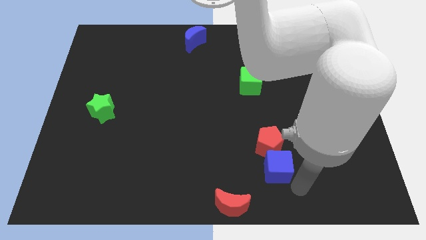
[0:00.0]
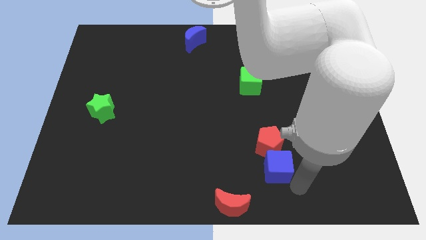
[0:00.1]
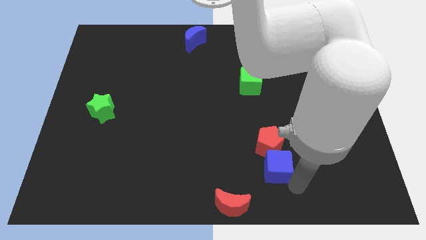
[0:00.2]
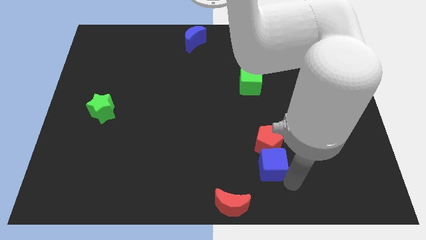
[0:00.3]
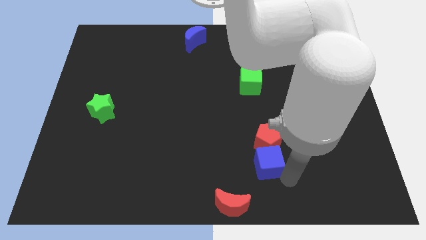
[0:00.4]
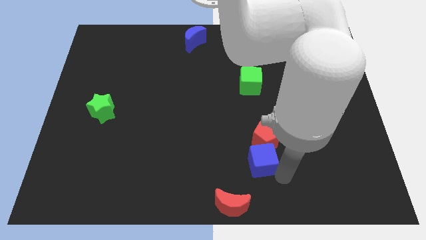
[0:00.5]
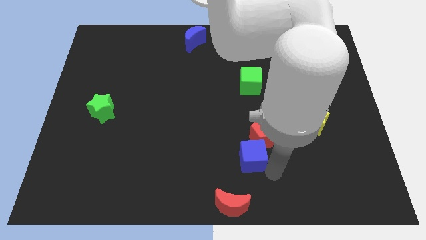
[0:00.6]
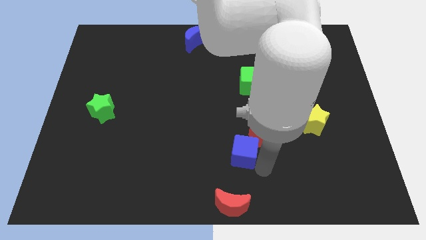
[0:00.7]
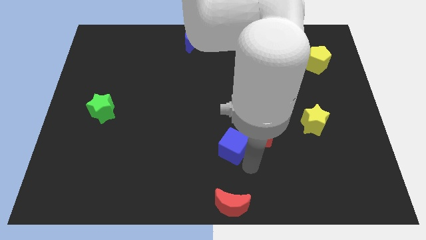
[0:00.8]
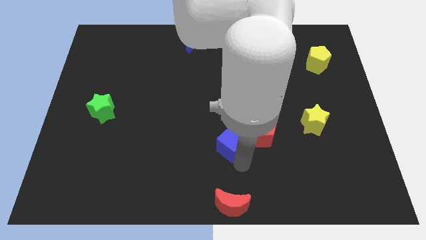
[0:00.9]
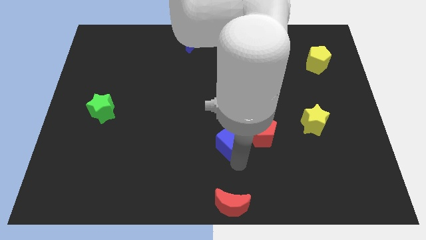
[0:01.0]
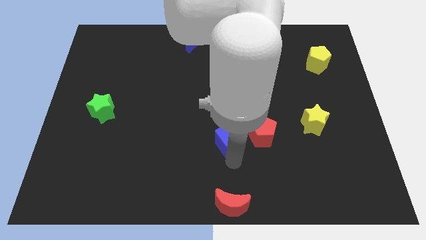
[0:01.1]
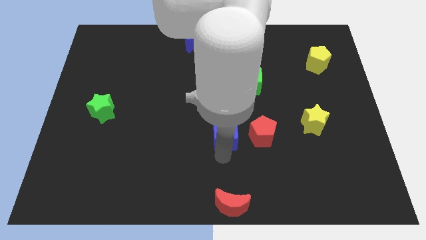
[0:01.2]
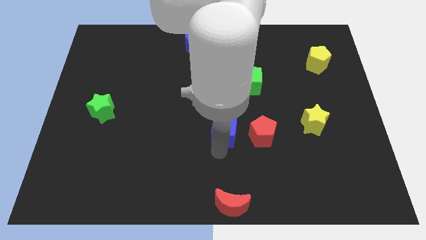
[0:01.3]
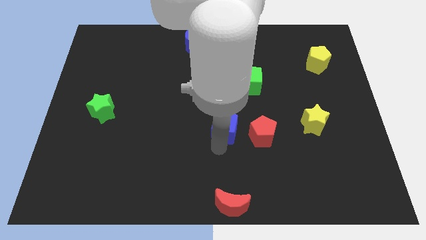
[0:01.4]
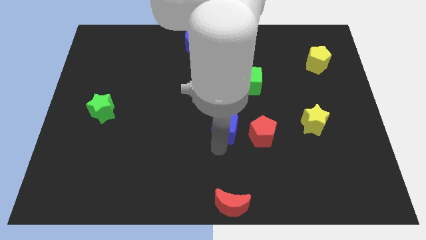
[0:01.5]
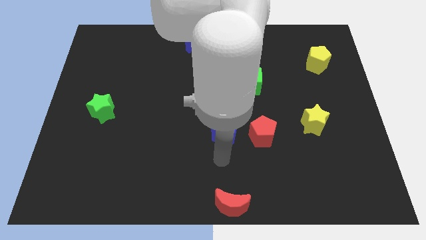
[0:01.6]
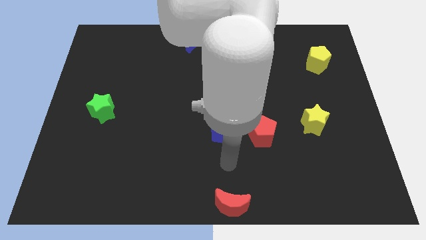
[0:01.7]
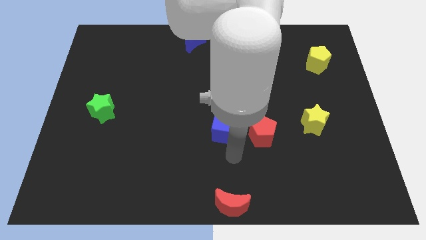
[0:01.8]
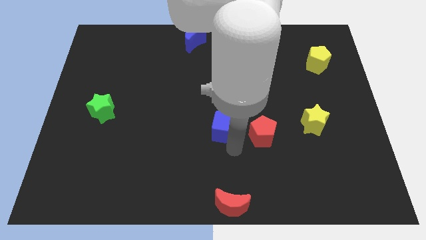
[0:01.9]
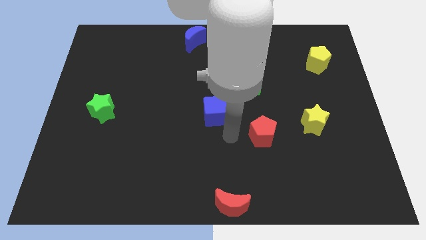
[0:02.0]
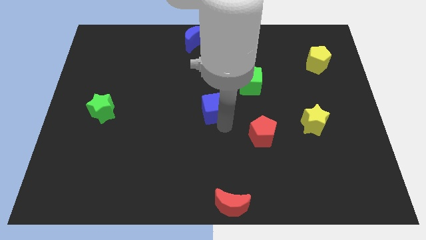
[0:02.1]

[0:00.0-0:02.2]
push the blue cube to the center of the board

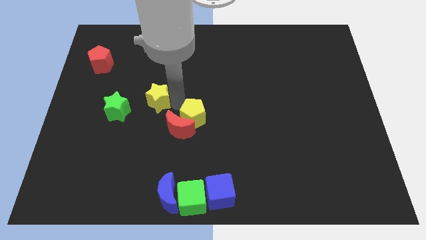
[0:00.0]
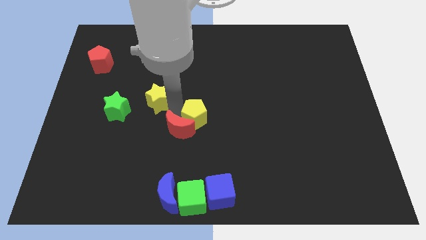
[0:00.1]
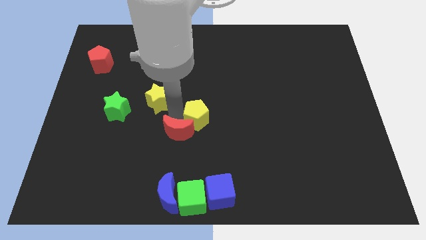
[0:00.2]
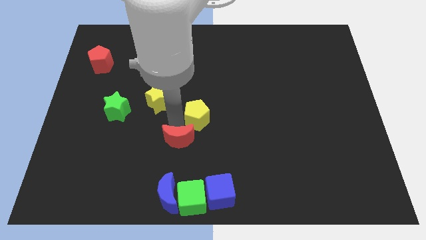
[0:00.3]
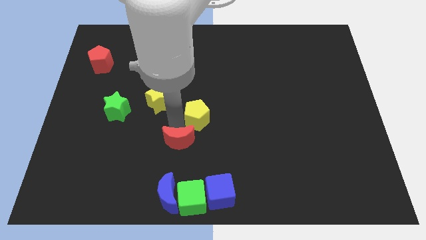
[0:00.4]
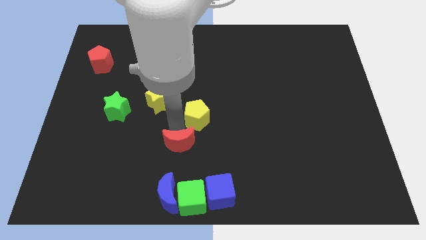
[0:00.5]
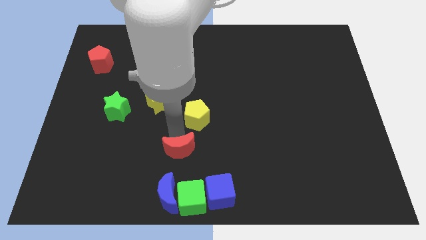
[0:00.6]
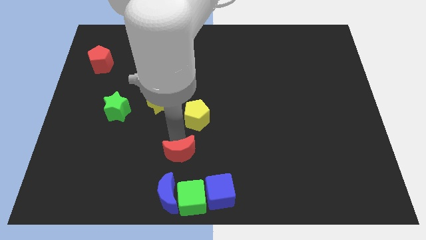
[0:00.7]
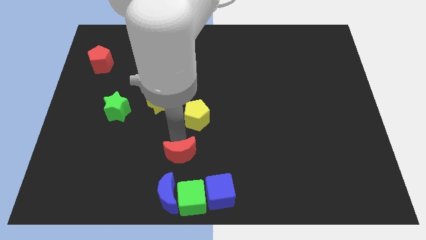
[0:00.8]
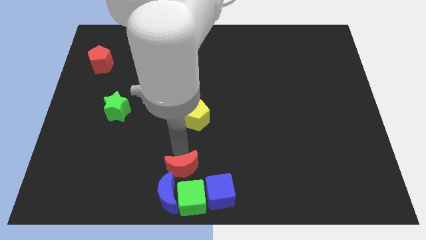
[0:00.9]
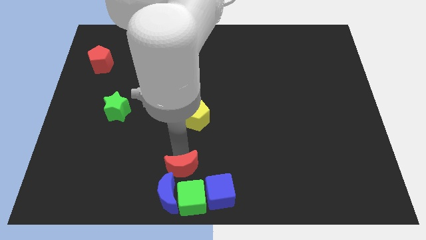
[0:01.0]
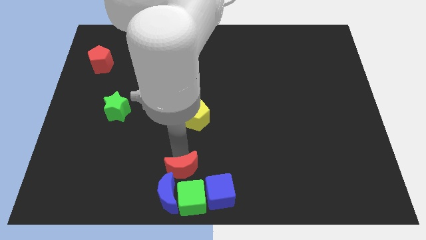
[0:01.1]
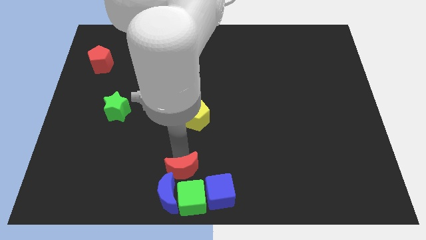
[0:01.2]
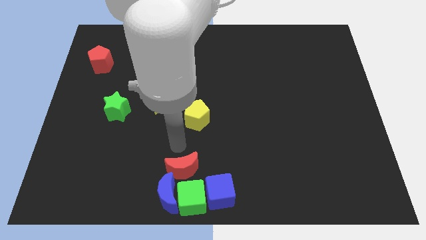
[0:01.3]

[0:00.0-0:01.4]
move the red crescent to the top side of the green cube

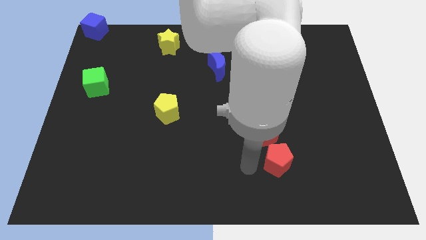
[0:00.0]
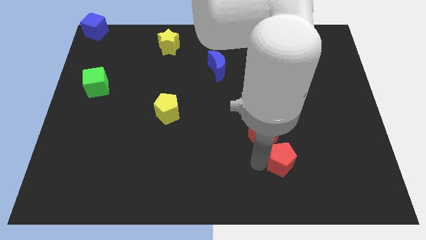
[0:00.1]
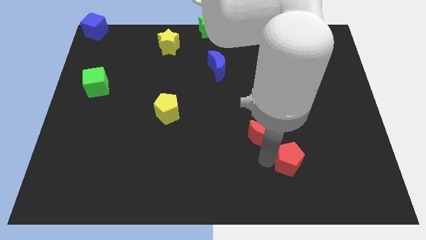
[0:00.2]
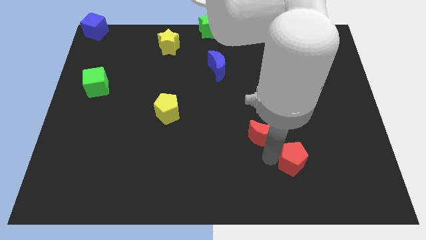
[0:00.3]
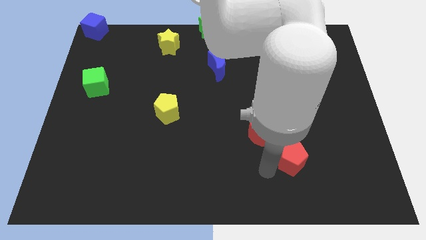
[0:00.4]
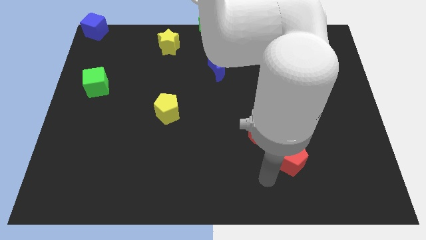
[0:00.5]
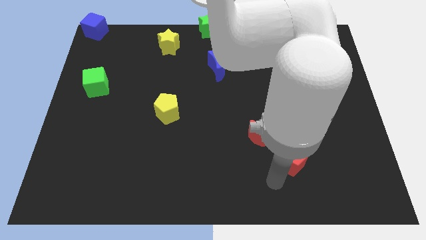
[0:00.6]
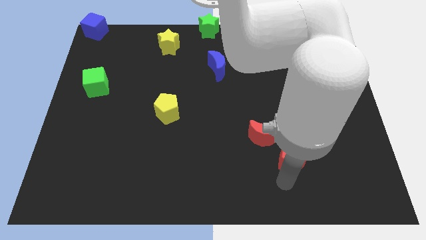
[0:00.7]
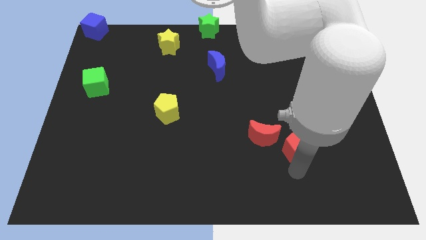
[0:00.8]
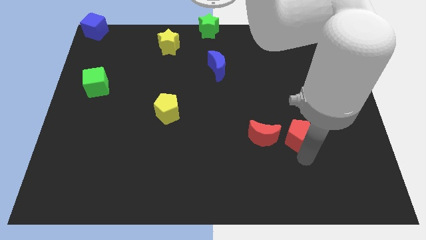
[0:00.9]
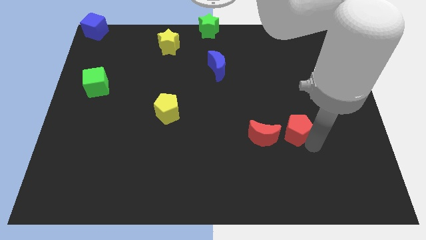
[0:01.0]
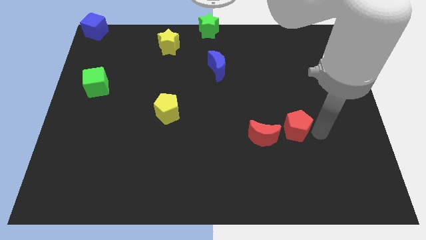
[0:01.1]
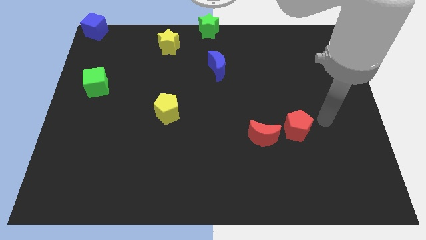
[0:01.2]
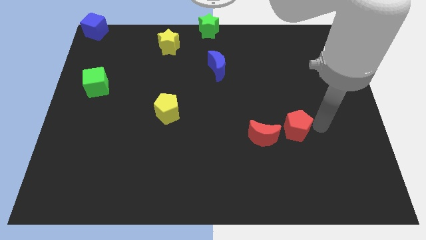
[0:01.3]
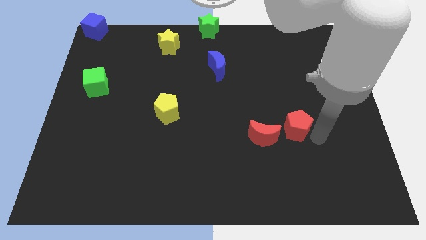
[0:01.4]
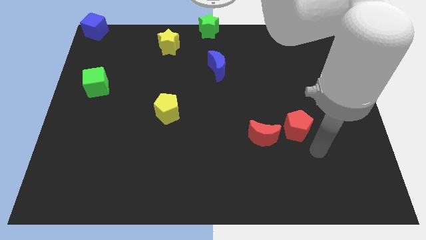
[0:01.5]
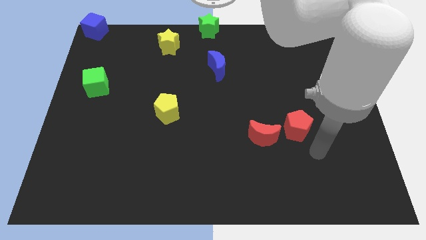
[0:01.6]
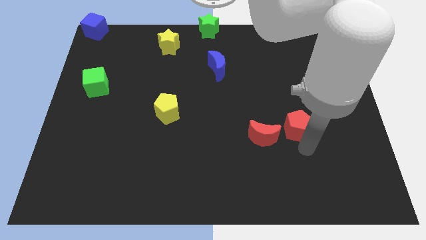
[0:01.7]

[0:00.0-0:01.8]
move the red pentagon to the right of the red crescent

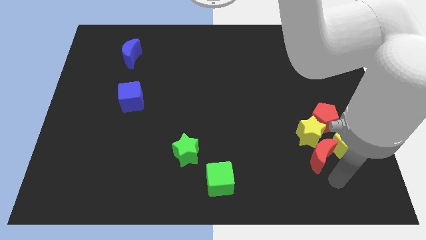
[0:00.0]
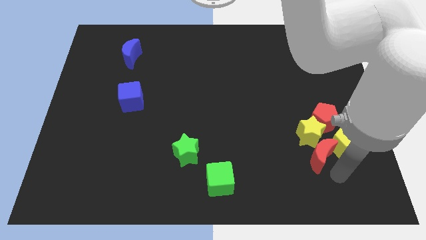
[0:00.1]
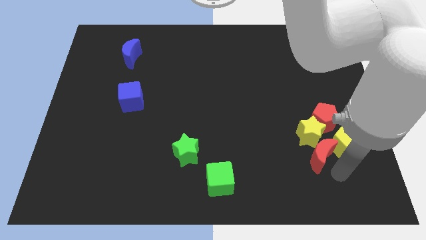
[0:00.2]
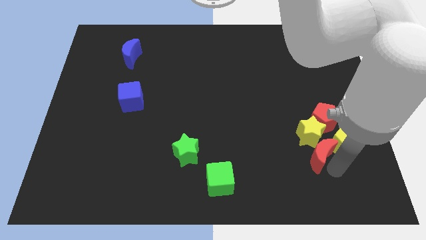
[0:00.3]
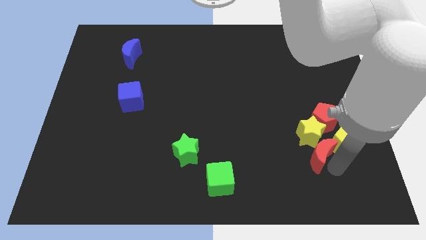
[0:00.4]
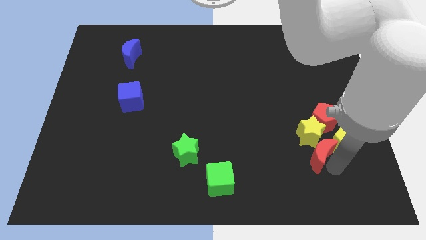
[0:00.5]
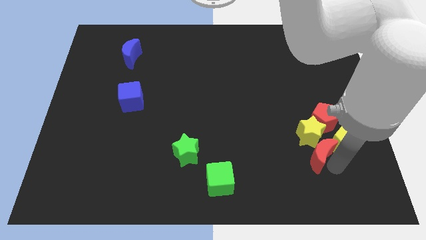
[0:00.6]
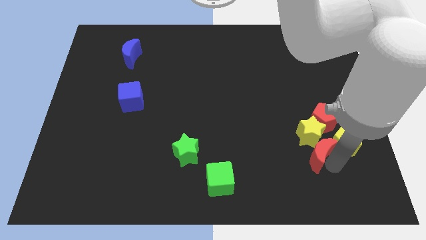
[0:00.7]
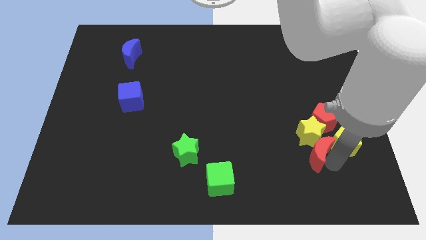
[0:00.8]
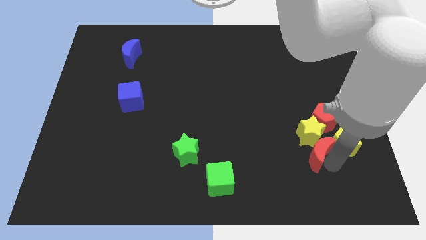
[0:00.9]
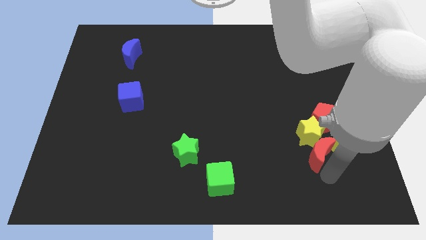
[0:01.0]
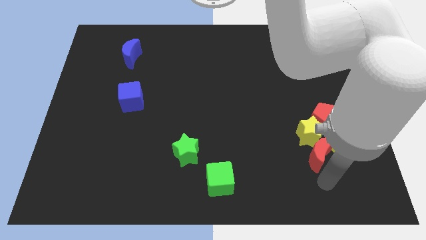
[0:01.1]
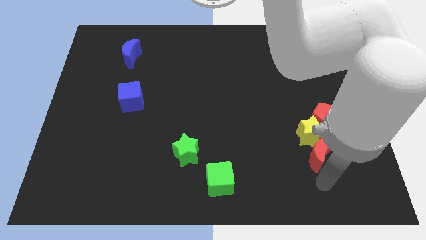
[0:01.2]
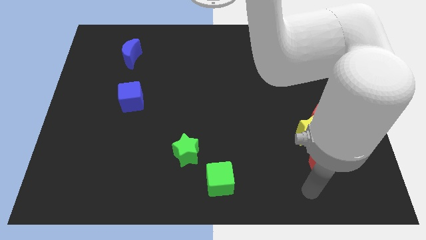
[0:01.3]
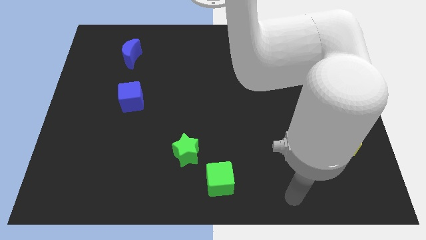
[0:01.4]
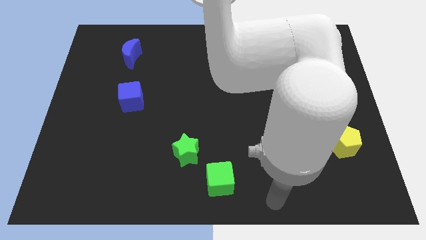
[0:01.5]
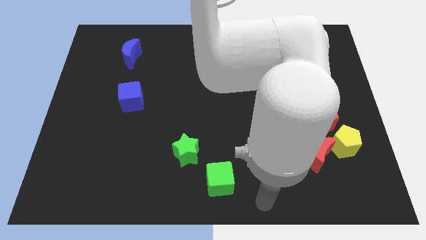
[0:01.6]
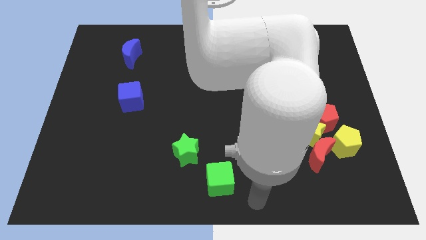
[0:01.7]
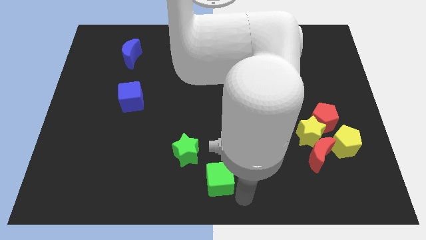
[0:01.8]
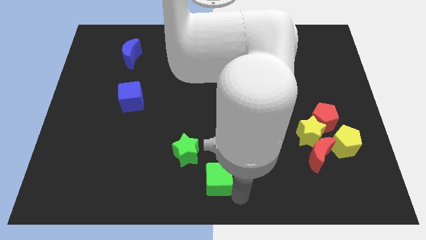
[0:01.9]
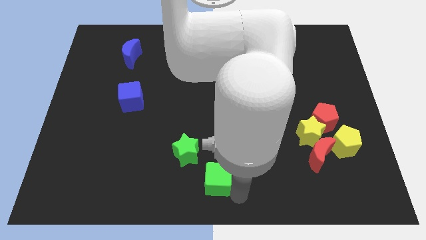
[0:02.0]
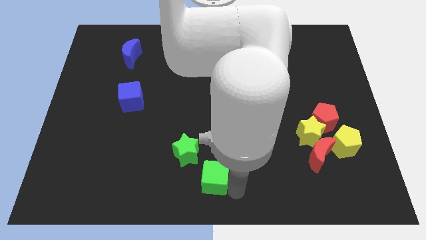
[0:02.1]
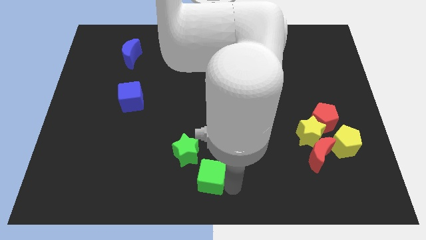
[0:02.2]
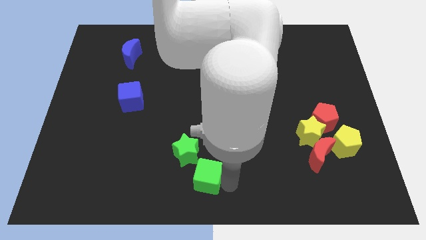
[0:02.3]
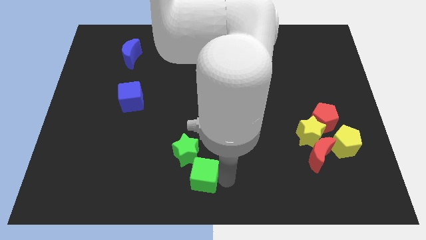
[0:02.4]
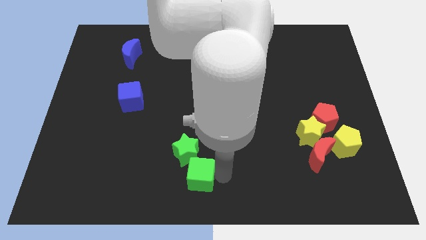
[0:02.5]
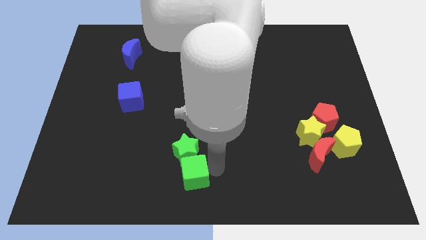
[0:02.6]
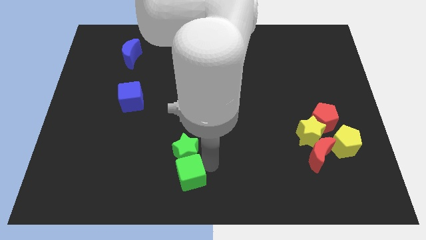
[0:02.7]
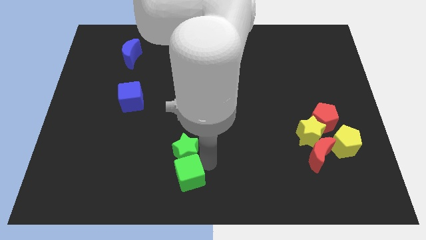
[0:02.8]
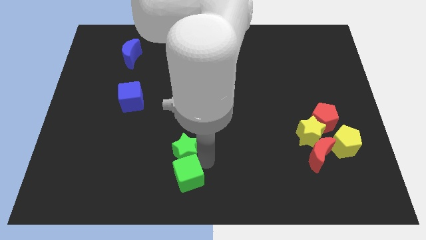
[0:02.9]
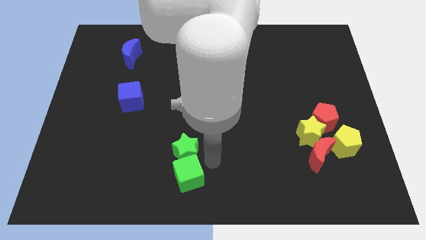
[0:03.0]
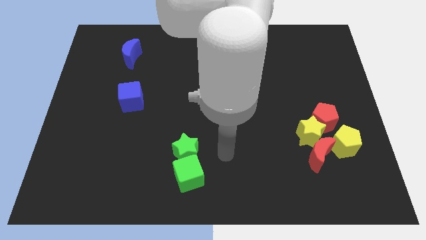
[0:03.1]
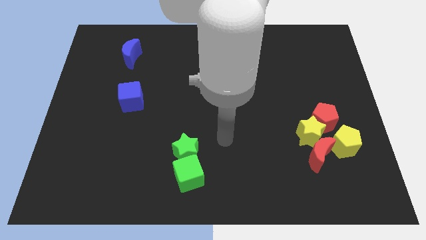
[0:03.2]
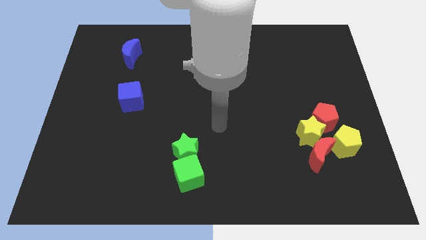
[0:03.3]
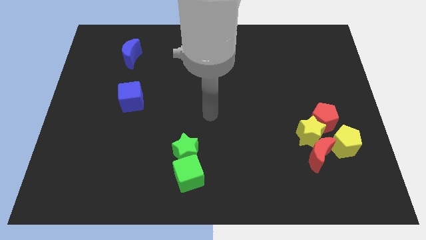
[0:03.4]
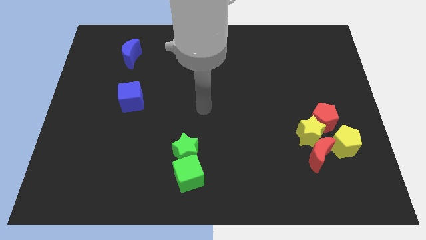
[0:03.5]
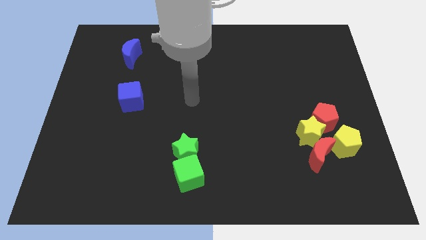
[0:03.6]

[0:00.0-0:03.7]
push the green cube down to the green star
